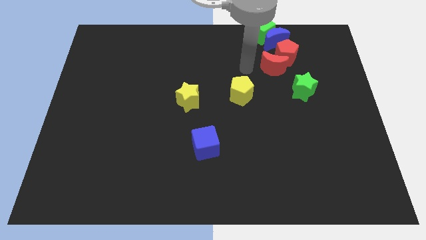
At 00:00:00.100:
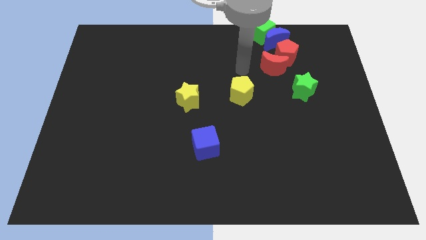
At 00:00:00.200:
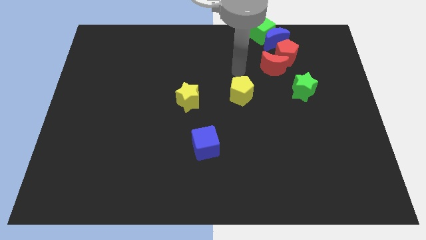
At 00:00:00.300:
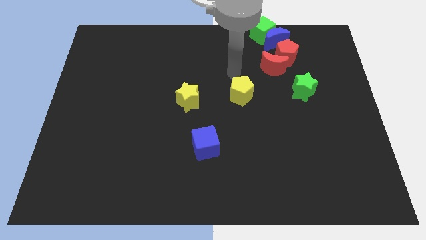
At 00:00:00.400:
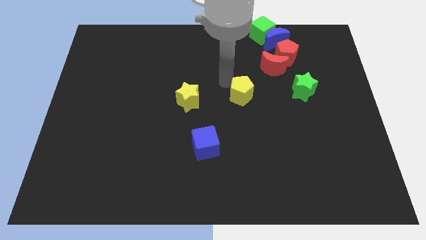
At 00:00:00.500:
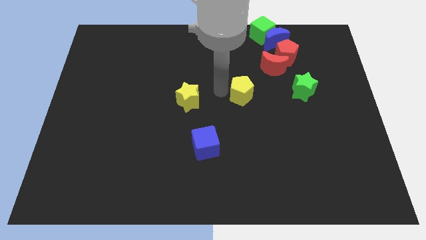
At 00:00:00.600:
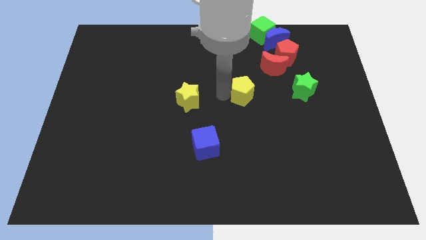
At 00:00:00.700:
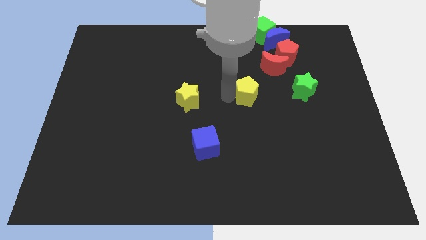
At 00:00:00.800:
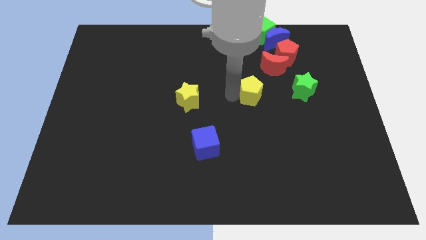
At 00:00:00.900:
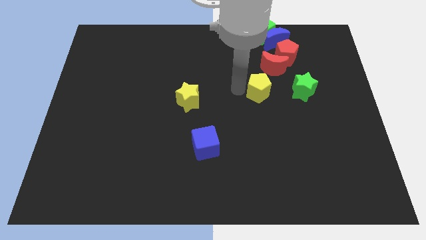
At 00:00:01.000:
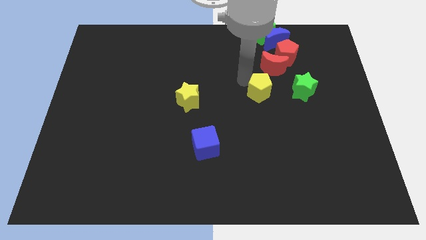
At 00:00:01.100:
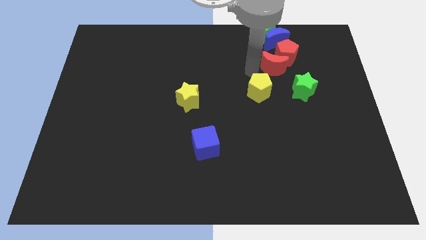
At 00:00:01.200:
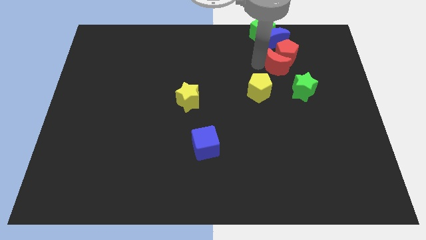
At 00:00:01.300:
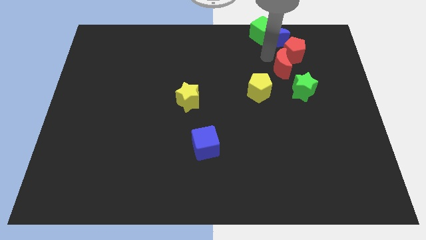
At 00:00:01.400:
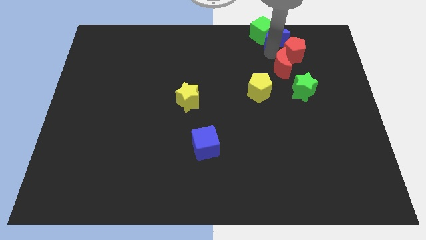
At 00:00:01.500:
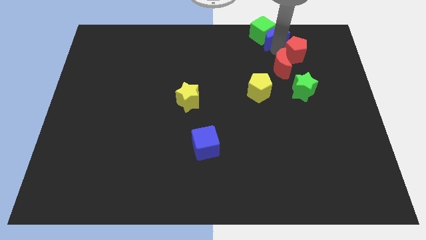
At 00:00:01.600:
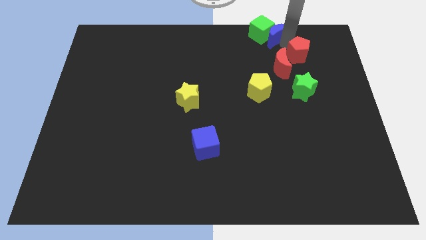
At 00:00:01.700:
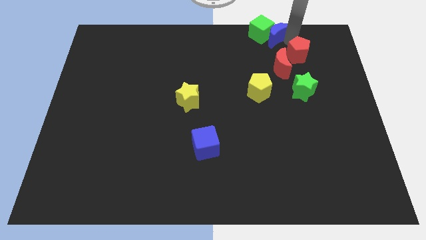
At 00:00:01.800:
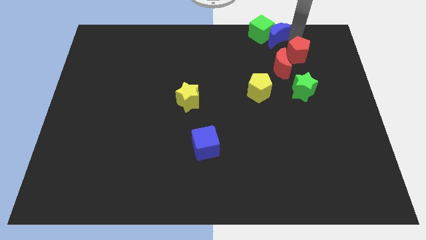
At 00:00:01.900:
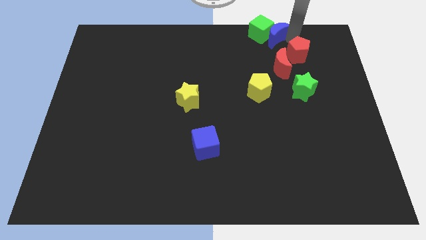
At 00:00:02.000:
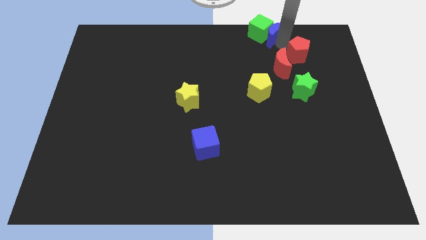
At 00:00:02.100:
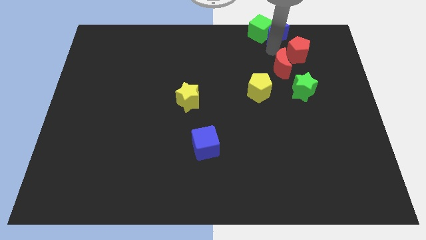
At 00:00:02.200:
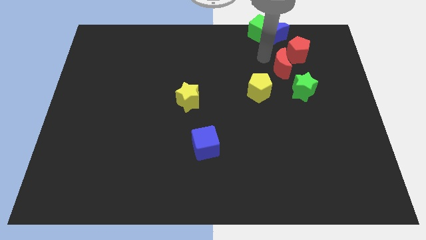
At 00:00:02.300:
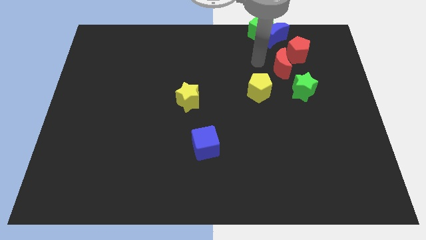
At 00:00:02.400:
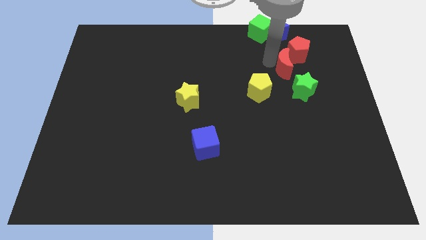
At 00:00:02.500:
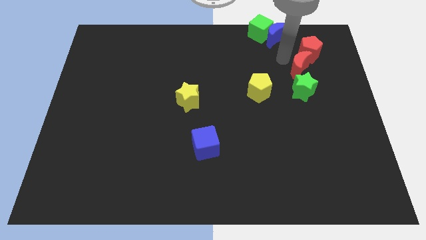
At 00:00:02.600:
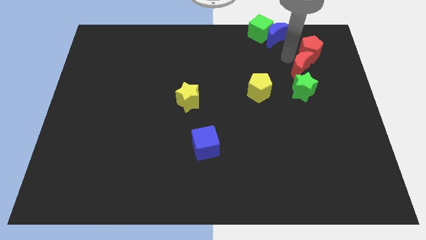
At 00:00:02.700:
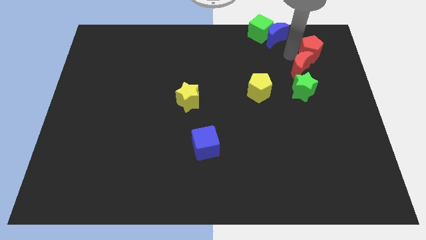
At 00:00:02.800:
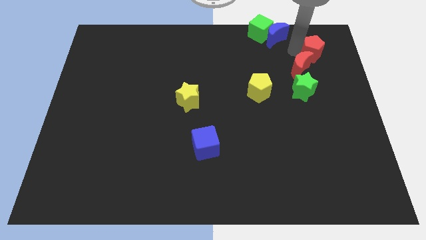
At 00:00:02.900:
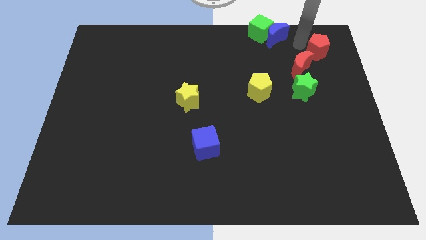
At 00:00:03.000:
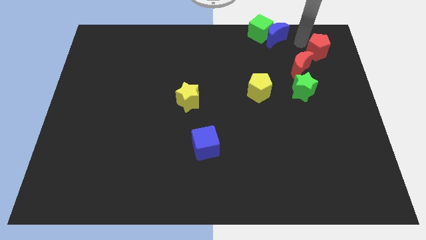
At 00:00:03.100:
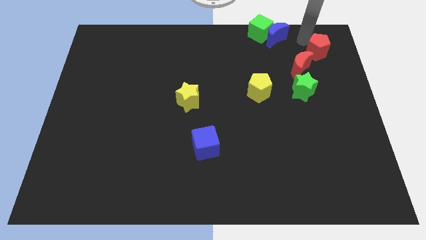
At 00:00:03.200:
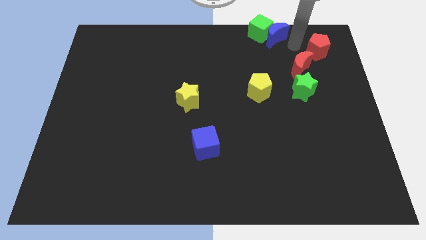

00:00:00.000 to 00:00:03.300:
move the red moon above the green star

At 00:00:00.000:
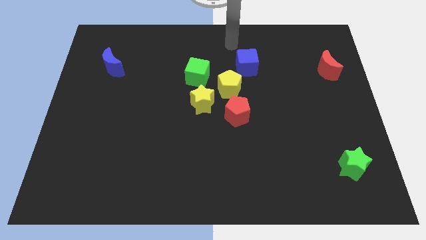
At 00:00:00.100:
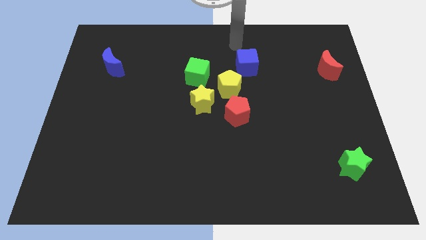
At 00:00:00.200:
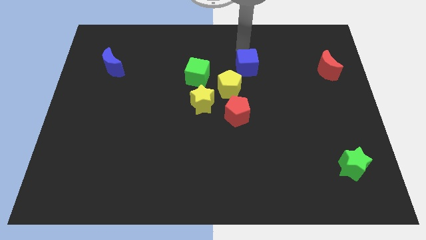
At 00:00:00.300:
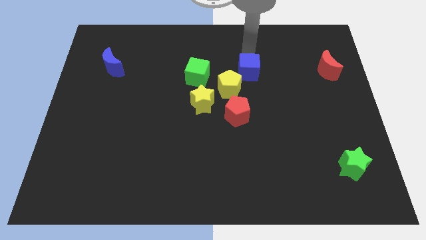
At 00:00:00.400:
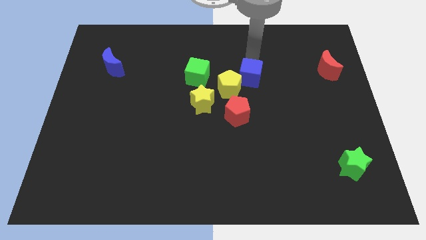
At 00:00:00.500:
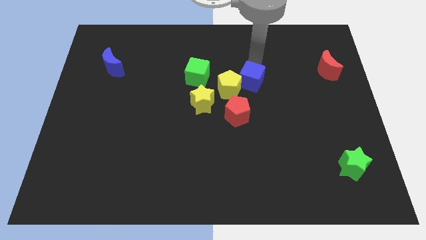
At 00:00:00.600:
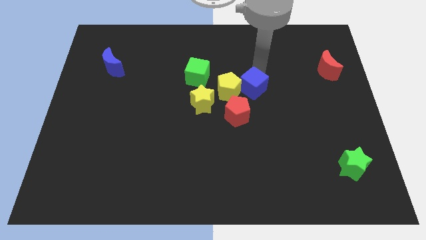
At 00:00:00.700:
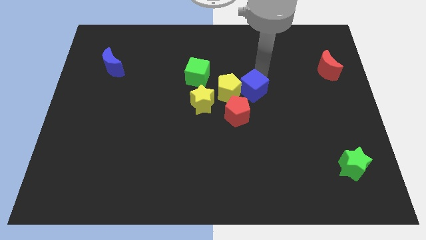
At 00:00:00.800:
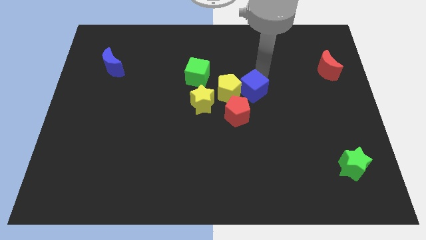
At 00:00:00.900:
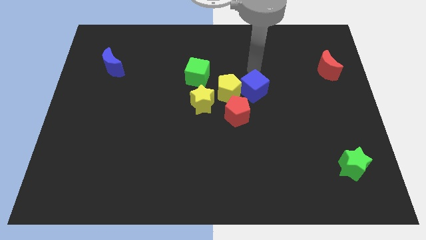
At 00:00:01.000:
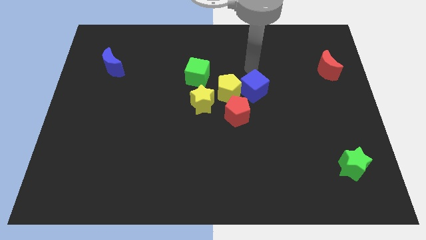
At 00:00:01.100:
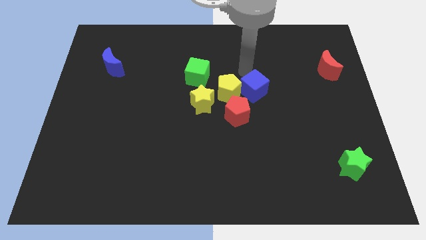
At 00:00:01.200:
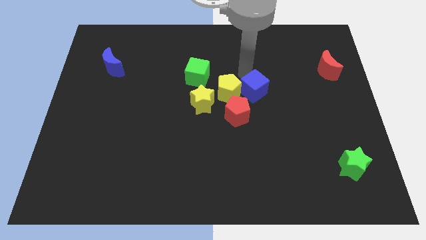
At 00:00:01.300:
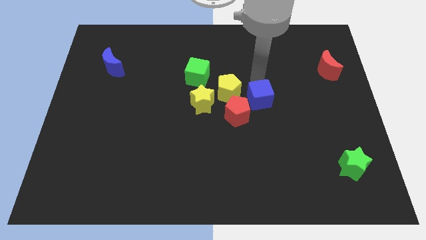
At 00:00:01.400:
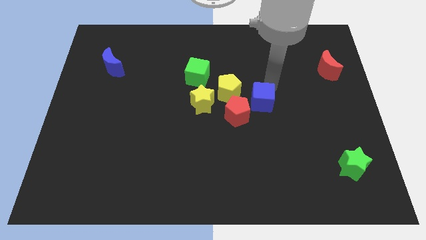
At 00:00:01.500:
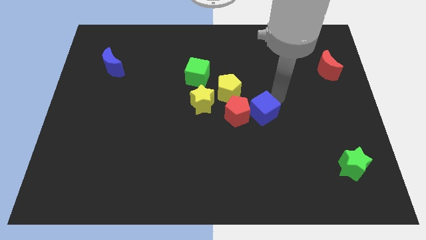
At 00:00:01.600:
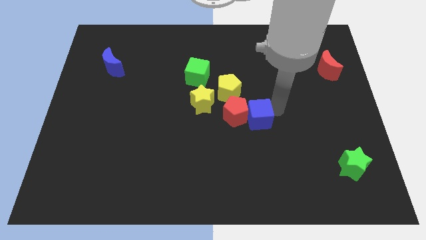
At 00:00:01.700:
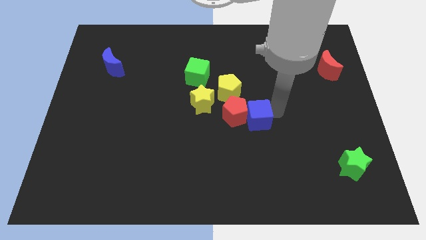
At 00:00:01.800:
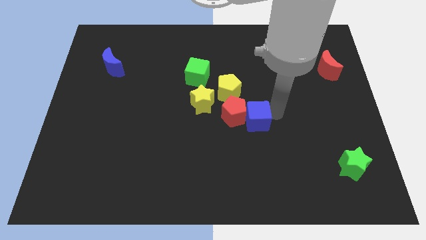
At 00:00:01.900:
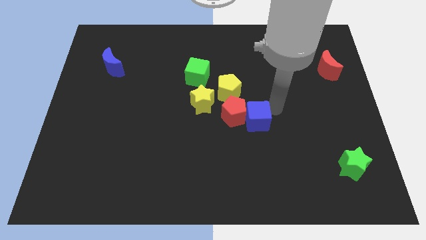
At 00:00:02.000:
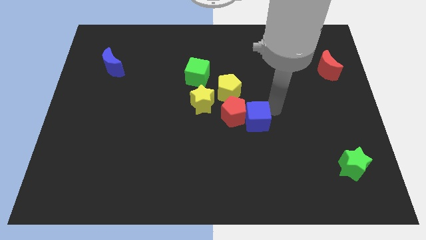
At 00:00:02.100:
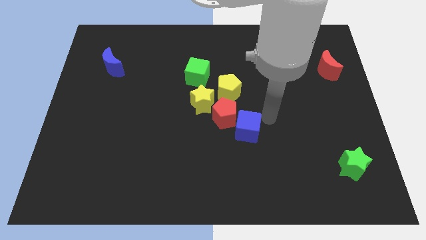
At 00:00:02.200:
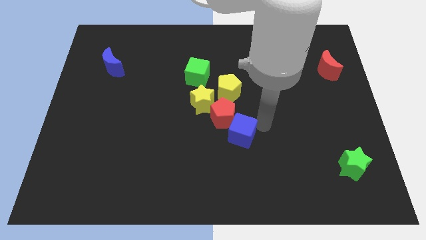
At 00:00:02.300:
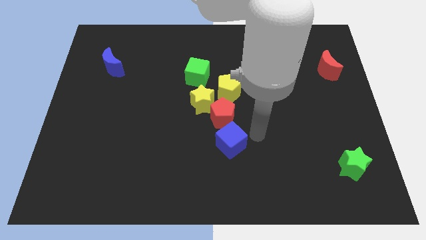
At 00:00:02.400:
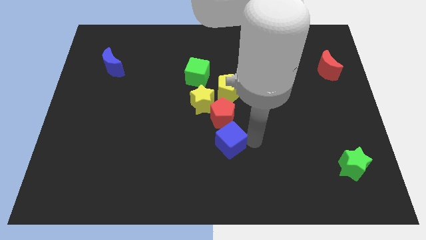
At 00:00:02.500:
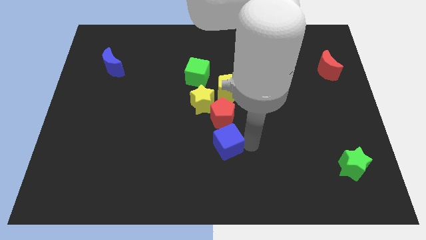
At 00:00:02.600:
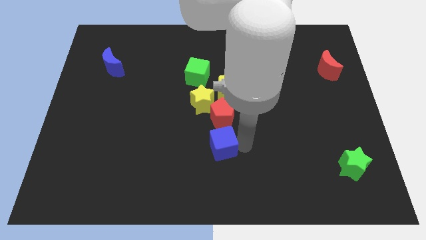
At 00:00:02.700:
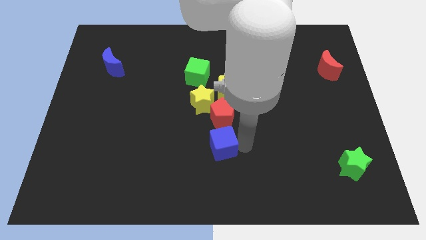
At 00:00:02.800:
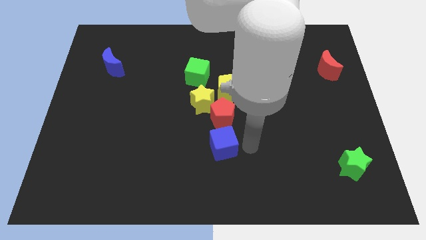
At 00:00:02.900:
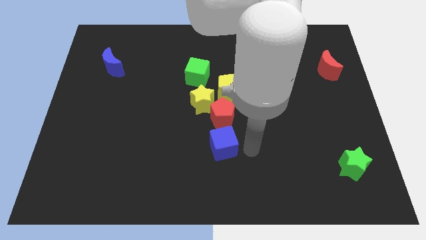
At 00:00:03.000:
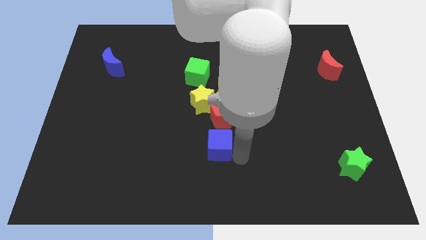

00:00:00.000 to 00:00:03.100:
push blue cube at the bottom of red pentagon

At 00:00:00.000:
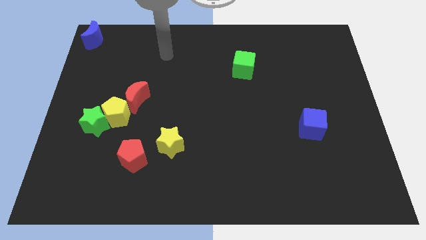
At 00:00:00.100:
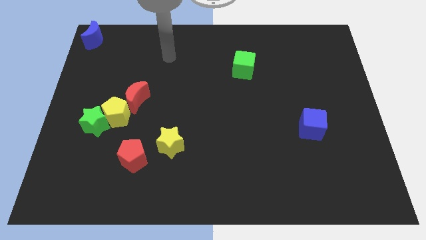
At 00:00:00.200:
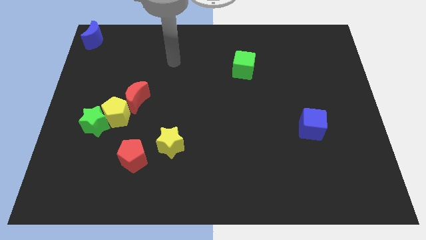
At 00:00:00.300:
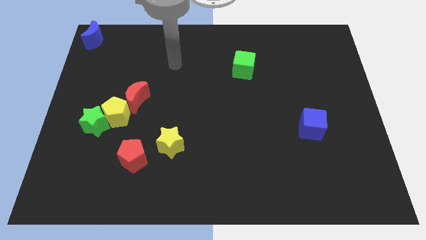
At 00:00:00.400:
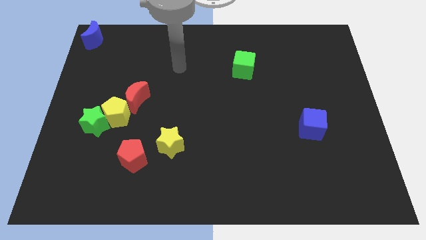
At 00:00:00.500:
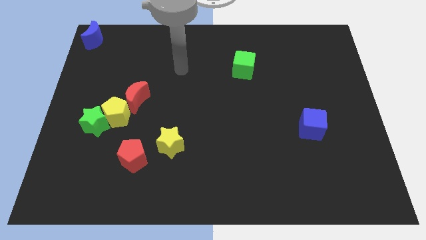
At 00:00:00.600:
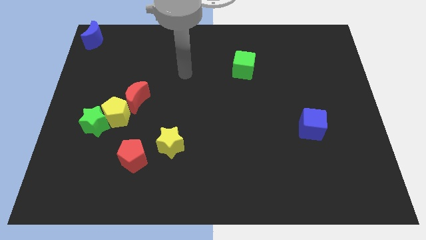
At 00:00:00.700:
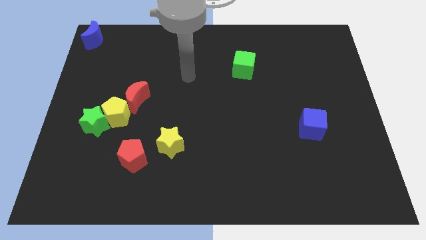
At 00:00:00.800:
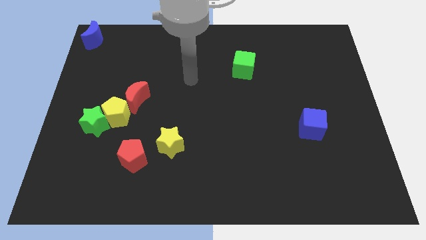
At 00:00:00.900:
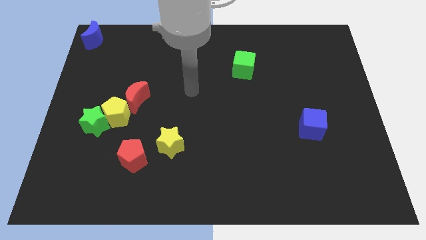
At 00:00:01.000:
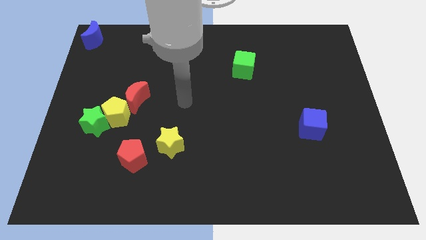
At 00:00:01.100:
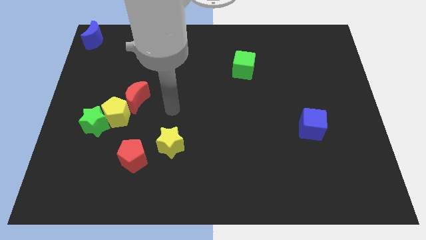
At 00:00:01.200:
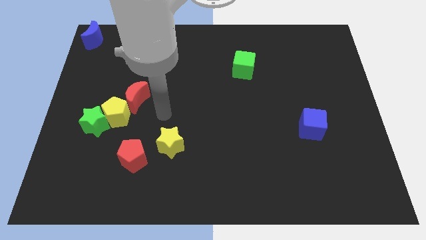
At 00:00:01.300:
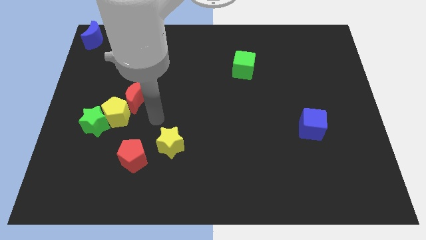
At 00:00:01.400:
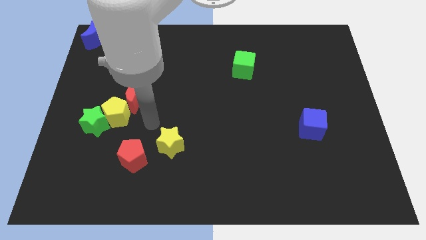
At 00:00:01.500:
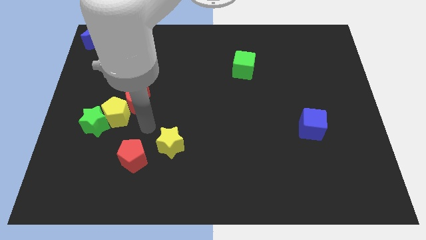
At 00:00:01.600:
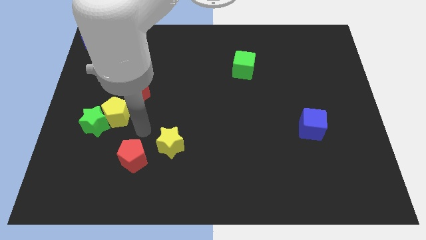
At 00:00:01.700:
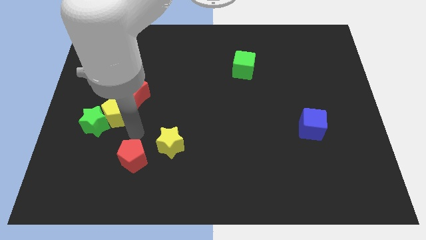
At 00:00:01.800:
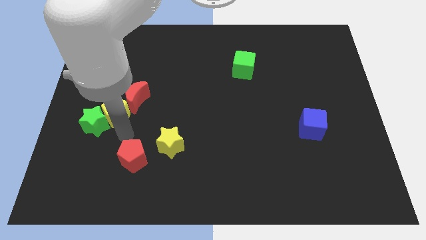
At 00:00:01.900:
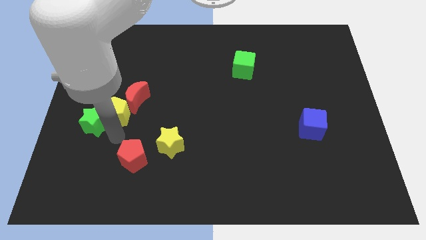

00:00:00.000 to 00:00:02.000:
move your arm to the bottom of the green star

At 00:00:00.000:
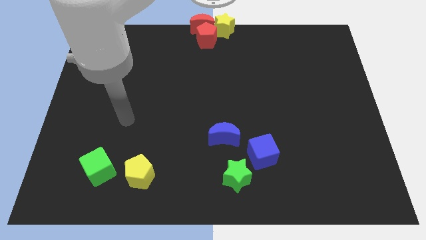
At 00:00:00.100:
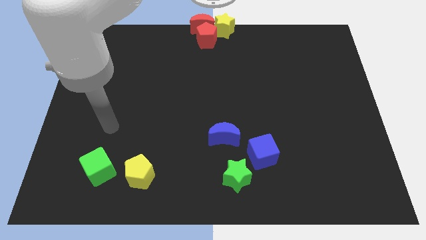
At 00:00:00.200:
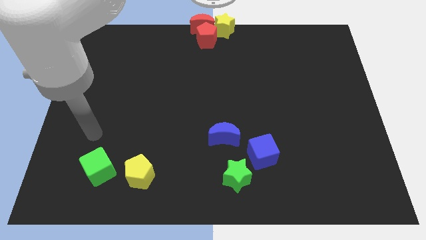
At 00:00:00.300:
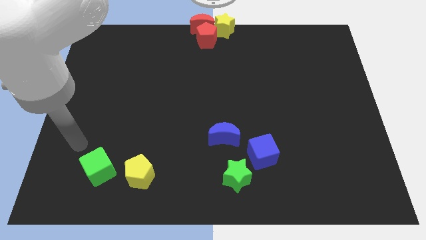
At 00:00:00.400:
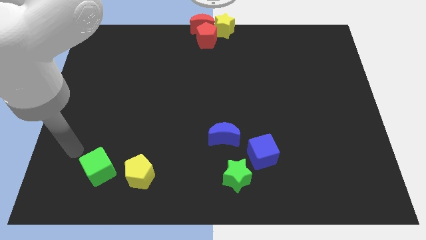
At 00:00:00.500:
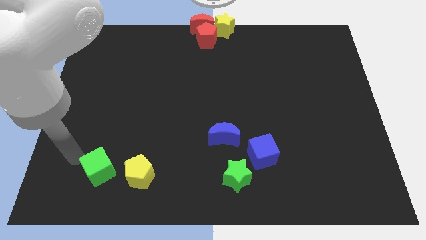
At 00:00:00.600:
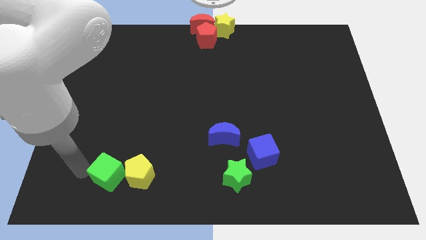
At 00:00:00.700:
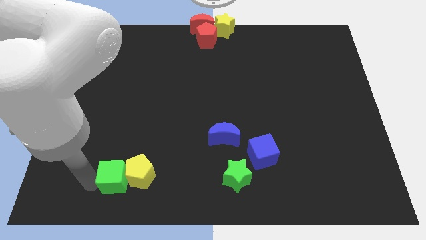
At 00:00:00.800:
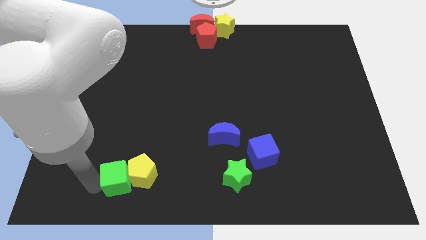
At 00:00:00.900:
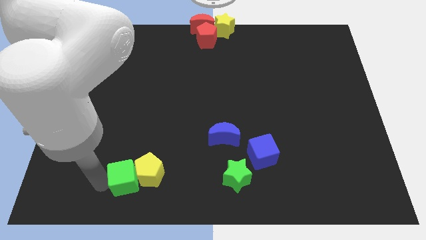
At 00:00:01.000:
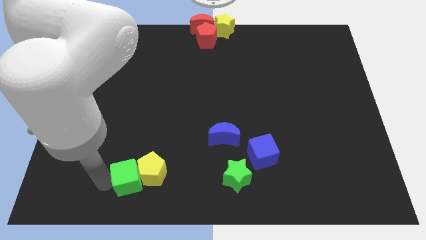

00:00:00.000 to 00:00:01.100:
push the green cube into the yellow pentagon
